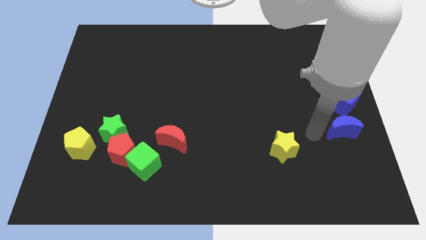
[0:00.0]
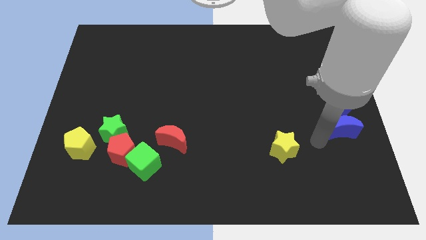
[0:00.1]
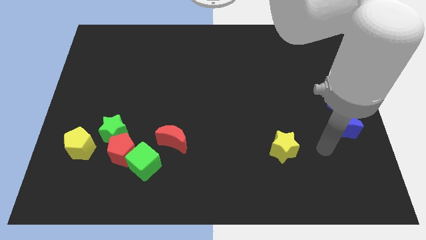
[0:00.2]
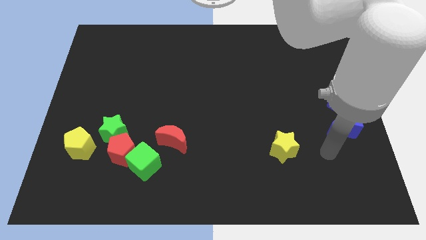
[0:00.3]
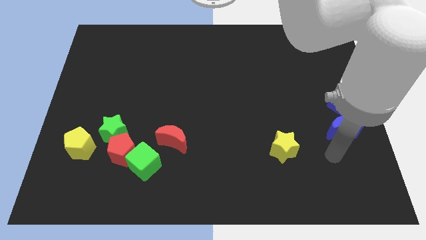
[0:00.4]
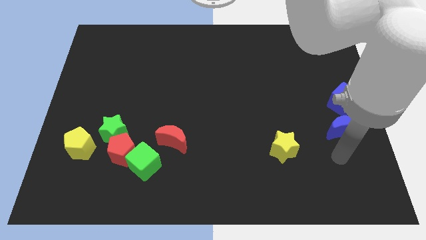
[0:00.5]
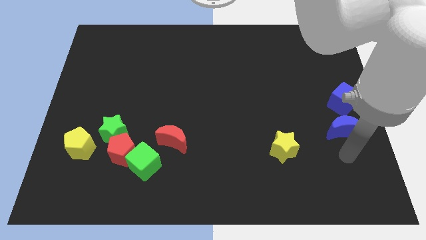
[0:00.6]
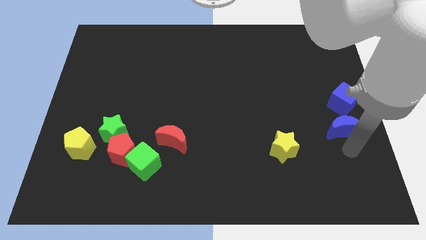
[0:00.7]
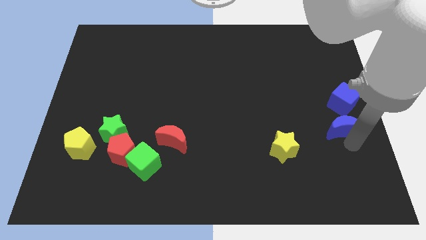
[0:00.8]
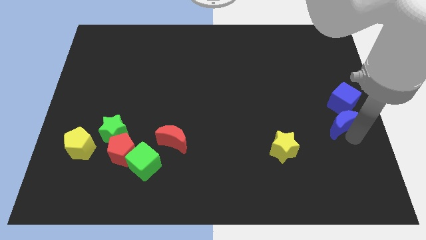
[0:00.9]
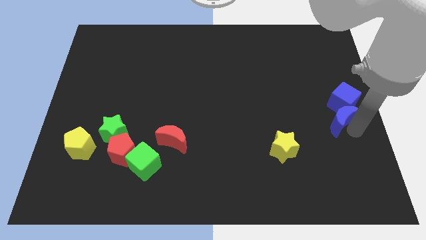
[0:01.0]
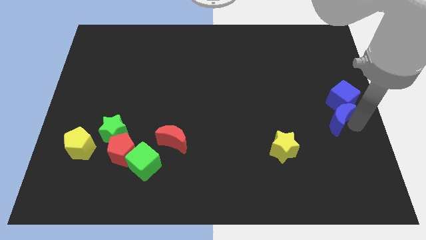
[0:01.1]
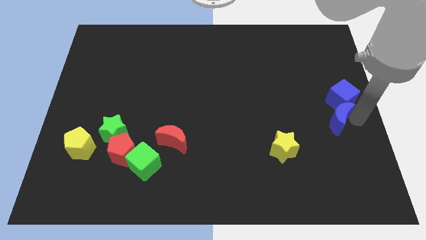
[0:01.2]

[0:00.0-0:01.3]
push blue moon in to blue cube

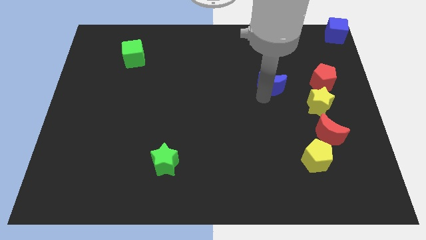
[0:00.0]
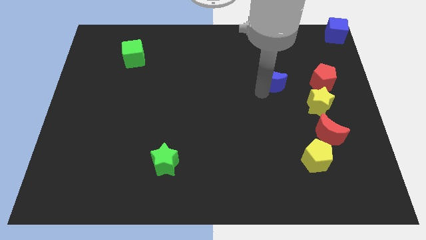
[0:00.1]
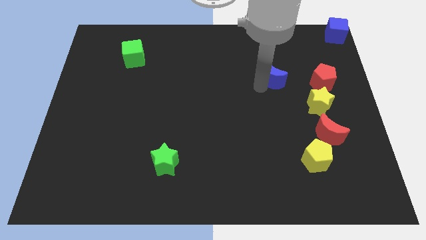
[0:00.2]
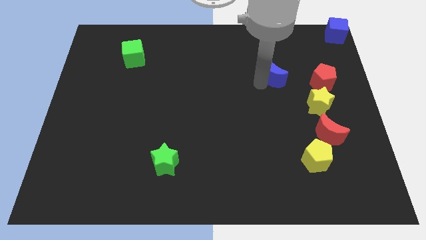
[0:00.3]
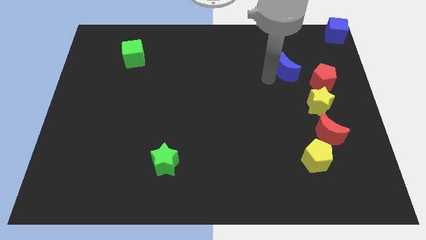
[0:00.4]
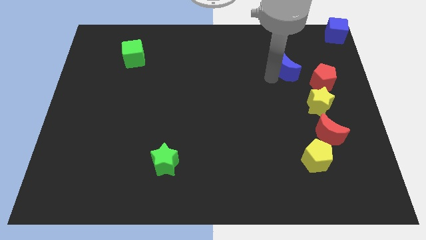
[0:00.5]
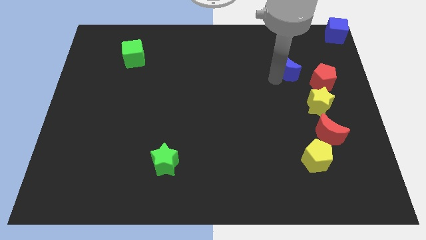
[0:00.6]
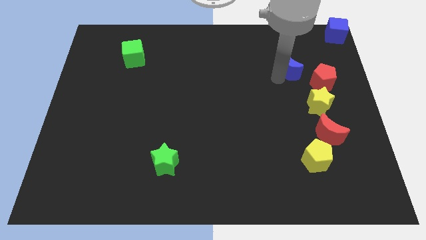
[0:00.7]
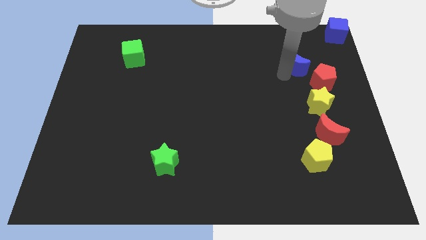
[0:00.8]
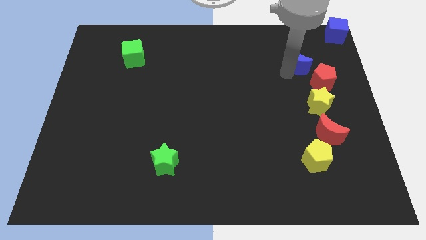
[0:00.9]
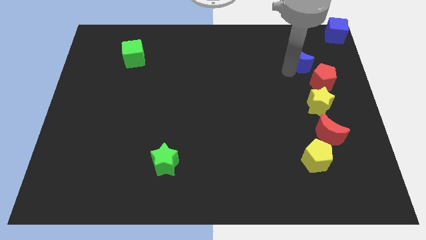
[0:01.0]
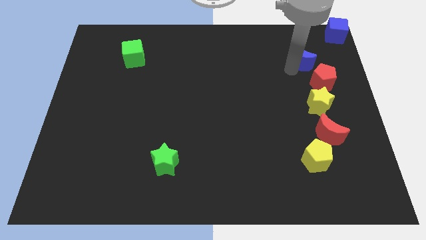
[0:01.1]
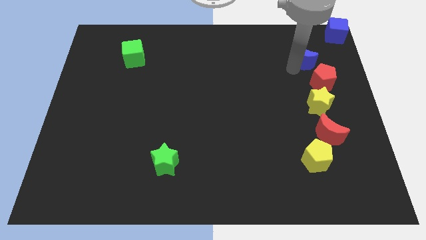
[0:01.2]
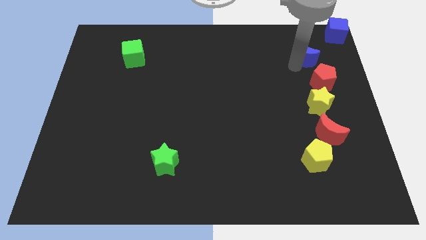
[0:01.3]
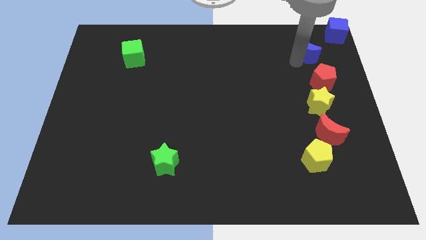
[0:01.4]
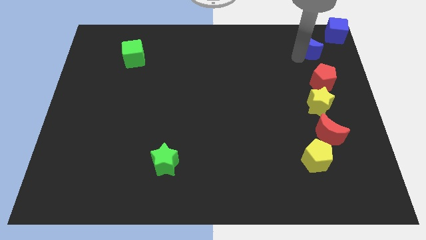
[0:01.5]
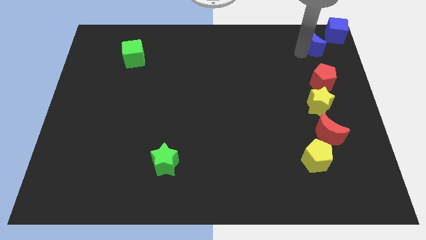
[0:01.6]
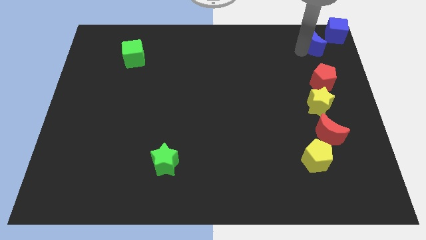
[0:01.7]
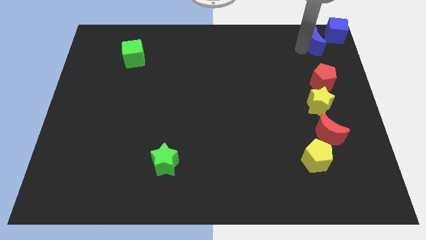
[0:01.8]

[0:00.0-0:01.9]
place the blue crescent above the red pentagon

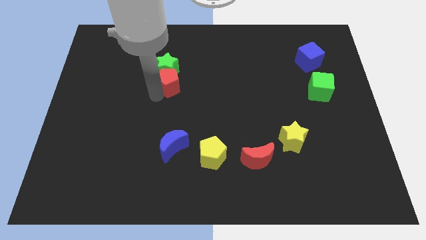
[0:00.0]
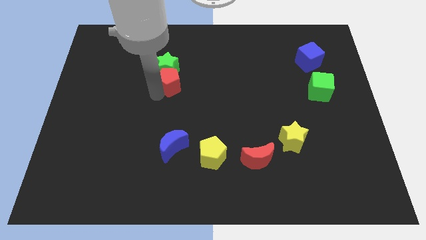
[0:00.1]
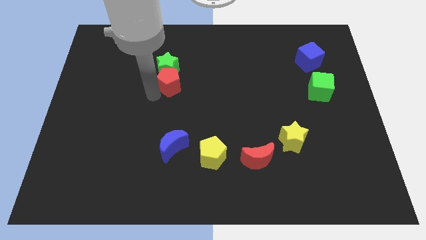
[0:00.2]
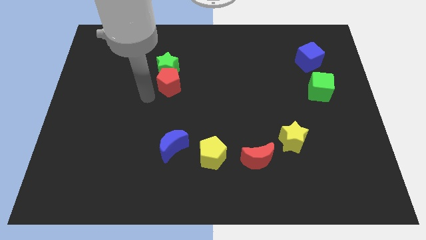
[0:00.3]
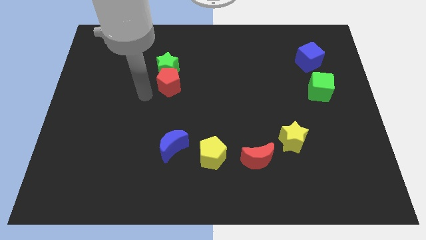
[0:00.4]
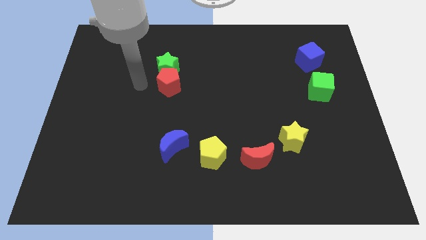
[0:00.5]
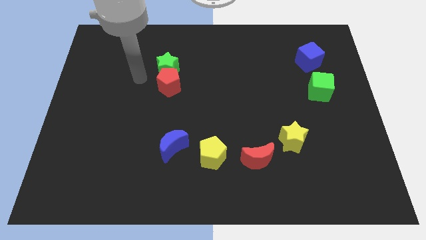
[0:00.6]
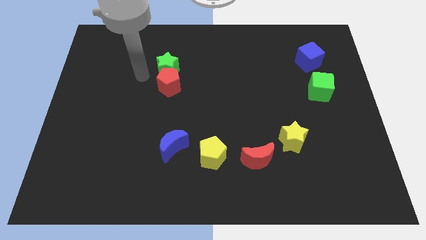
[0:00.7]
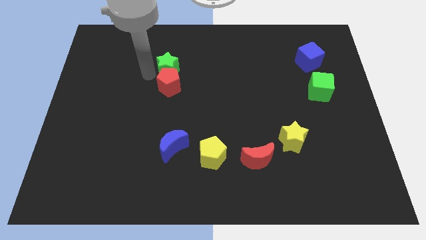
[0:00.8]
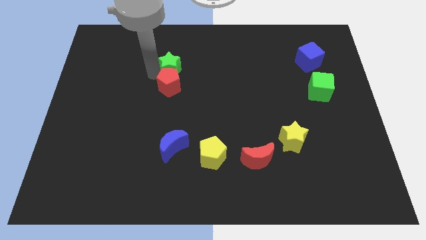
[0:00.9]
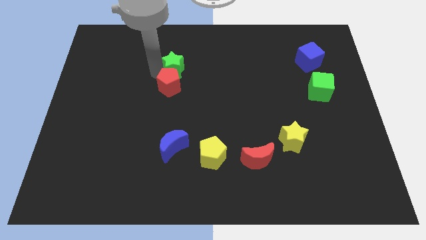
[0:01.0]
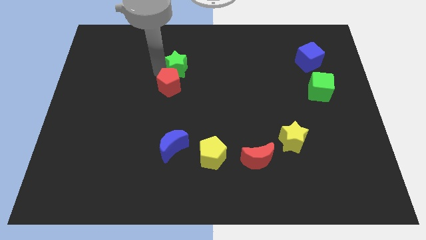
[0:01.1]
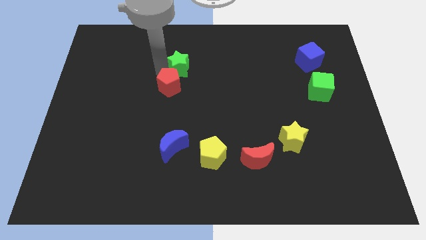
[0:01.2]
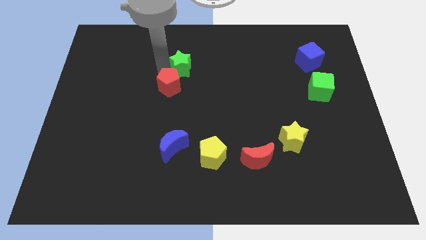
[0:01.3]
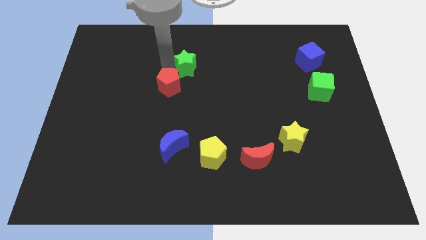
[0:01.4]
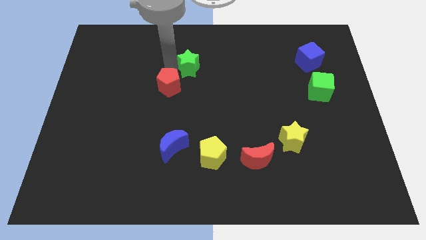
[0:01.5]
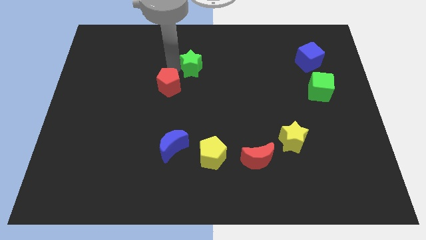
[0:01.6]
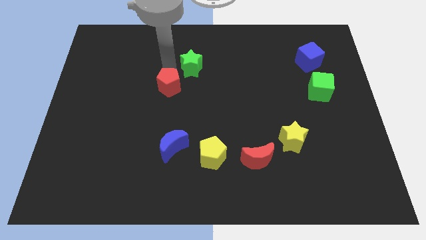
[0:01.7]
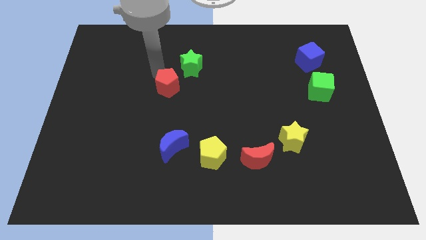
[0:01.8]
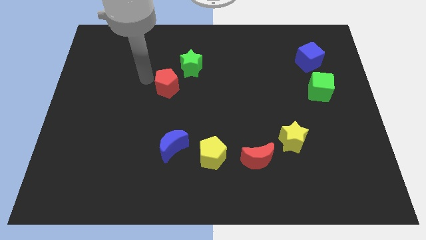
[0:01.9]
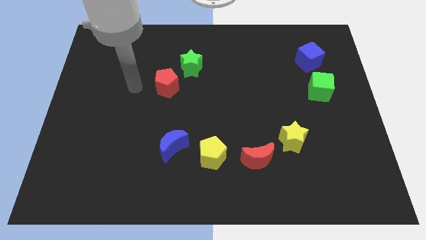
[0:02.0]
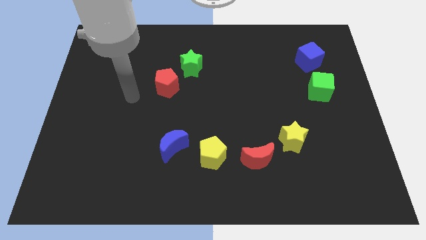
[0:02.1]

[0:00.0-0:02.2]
separate the green star from the red pentagon

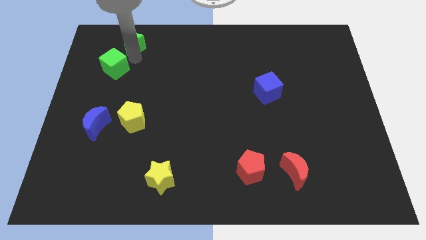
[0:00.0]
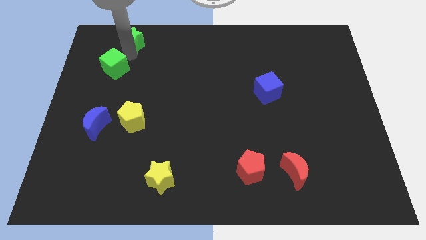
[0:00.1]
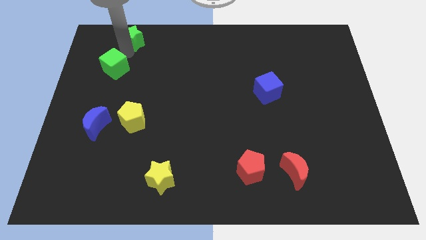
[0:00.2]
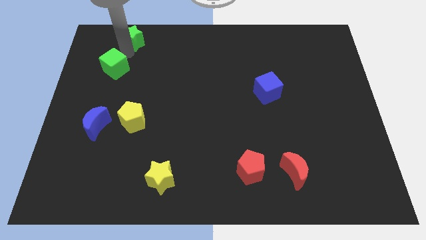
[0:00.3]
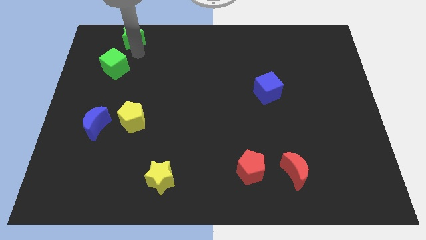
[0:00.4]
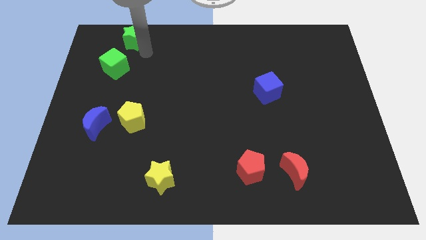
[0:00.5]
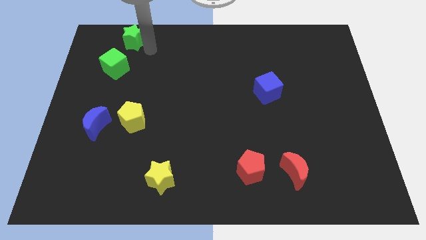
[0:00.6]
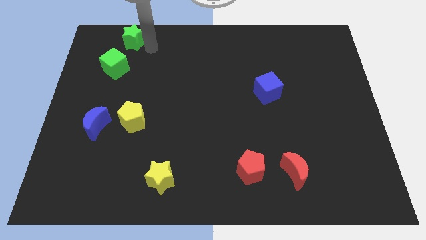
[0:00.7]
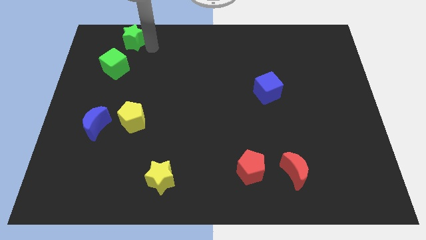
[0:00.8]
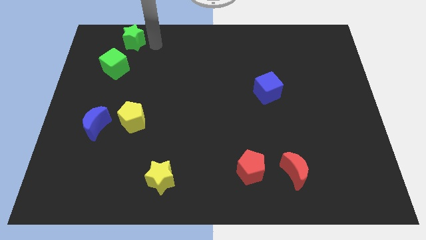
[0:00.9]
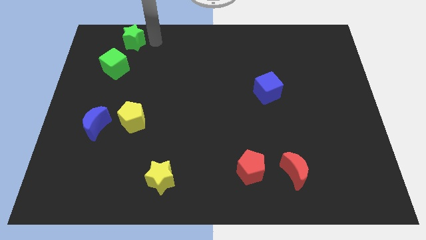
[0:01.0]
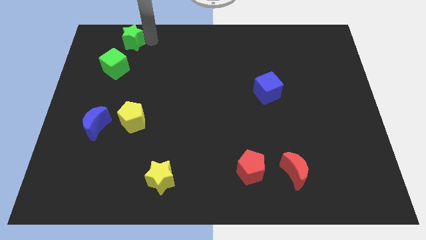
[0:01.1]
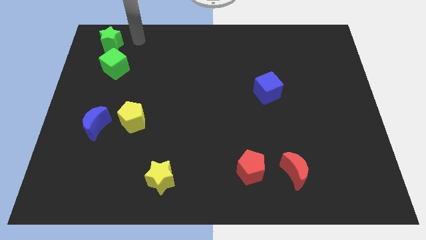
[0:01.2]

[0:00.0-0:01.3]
put green star above green cube

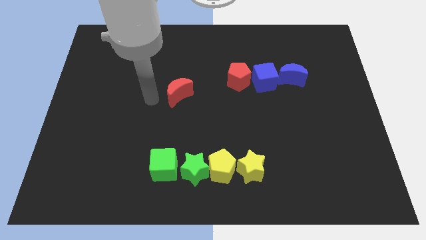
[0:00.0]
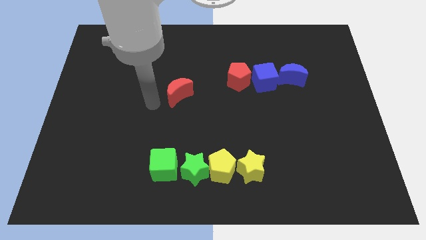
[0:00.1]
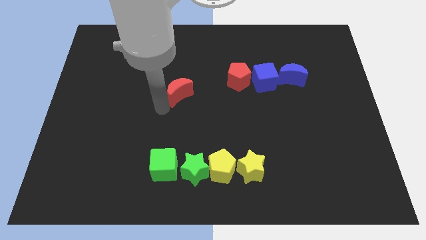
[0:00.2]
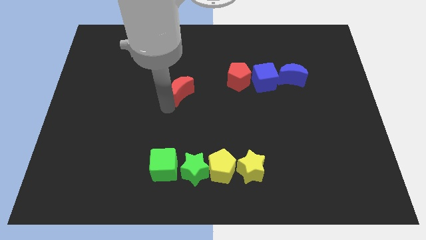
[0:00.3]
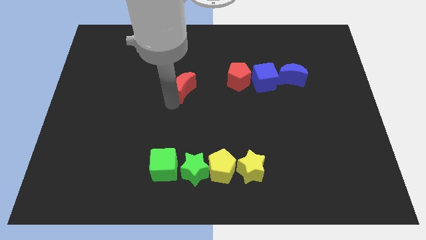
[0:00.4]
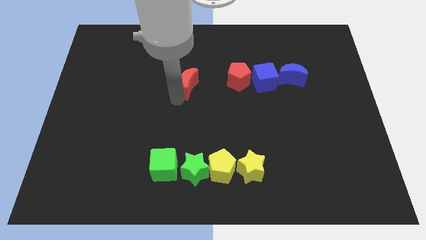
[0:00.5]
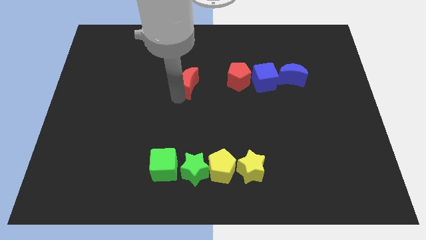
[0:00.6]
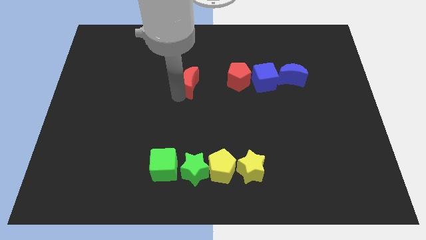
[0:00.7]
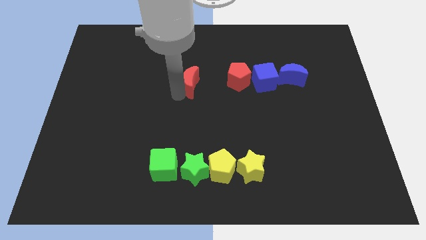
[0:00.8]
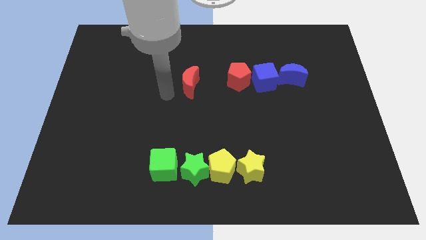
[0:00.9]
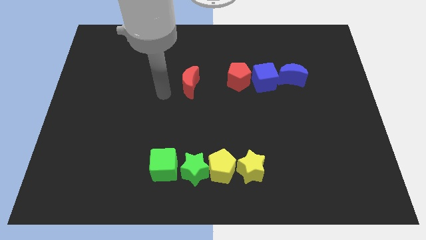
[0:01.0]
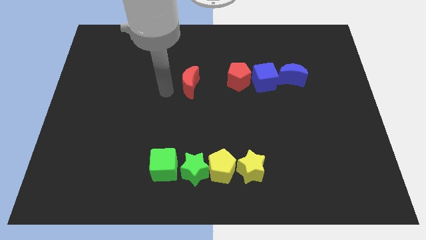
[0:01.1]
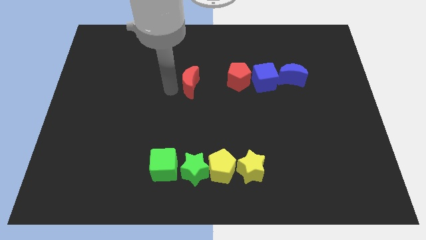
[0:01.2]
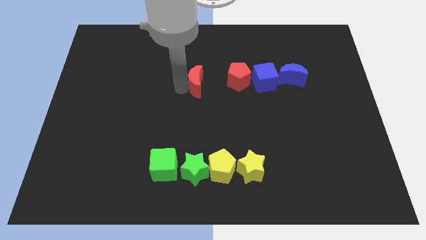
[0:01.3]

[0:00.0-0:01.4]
move the red moon towards the red pentagon

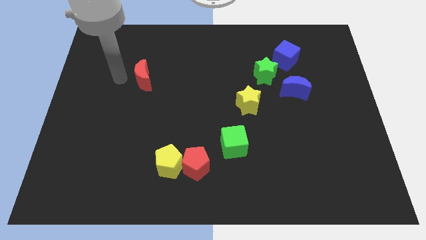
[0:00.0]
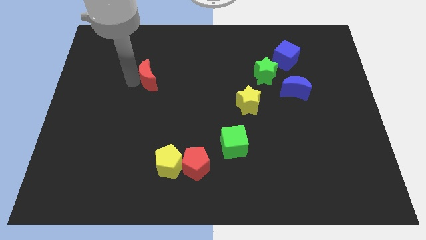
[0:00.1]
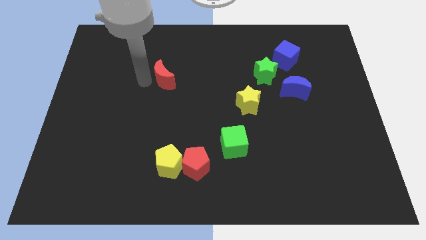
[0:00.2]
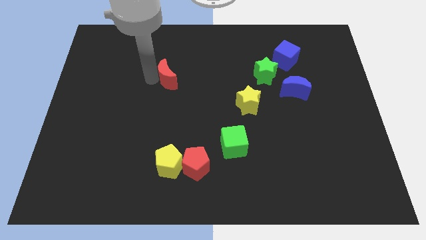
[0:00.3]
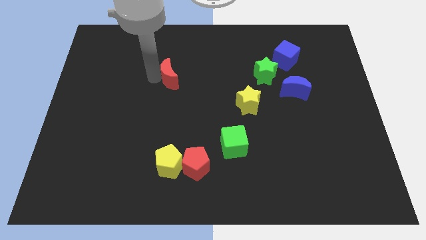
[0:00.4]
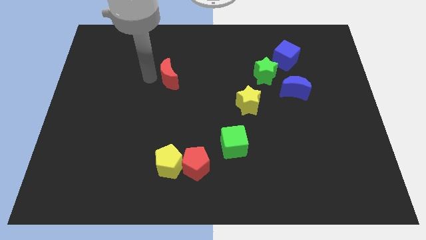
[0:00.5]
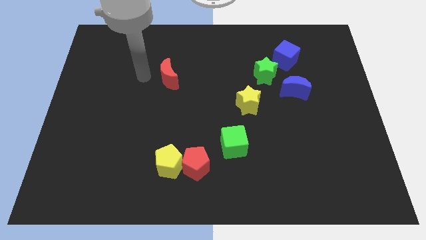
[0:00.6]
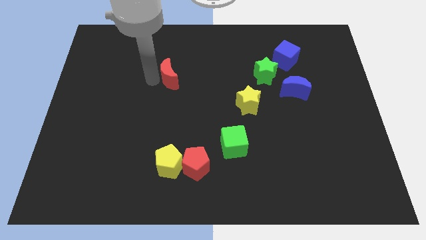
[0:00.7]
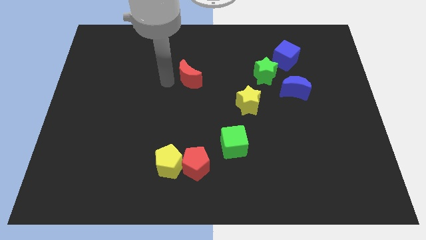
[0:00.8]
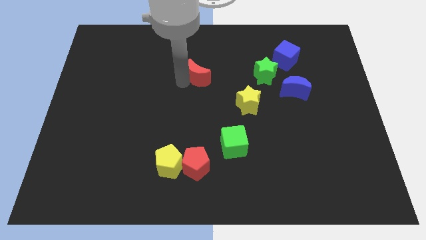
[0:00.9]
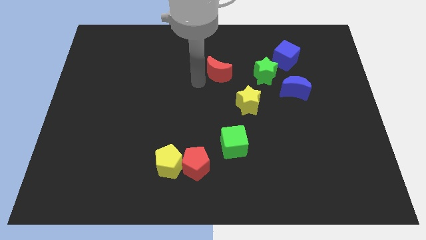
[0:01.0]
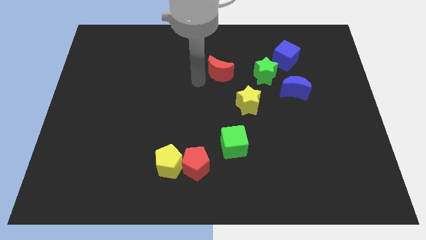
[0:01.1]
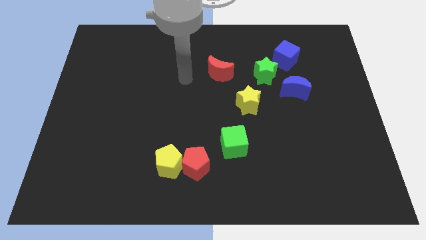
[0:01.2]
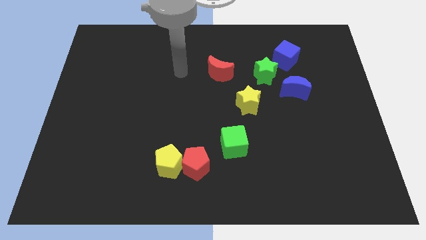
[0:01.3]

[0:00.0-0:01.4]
place the red crescent to the left side of the green star
